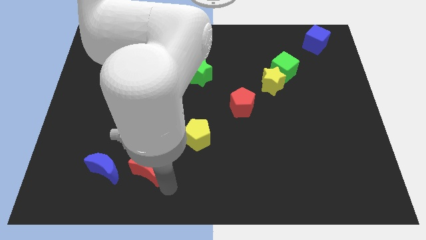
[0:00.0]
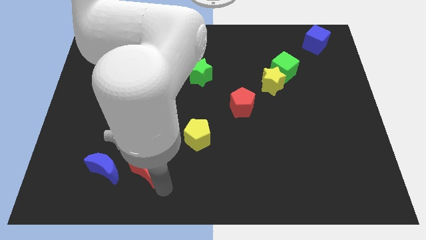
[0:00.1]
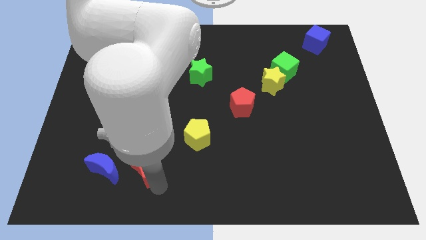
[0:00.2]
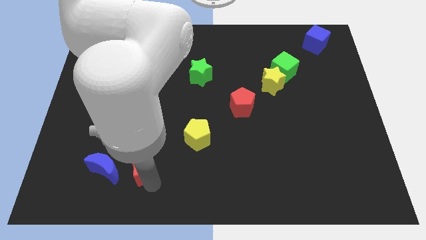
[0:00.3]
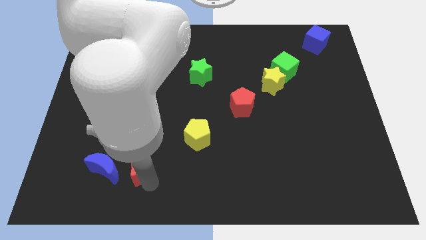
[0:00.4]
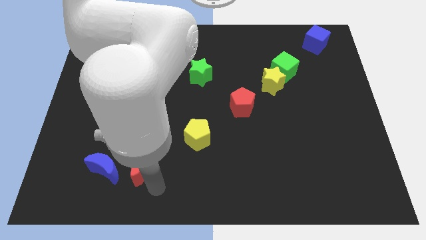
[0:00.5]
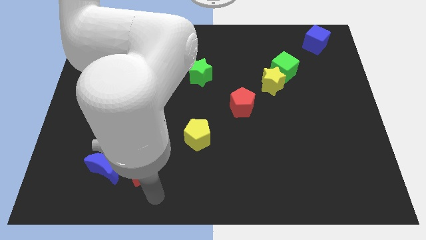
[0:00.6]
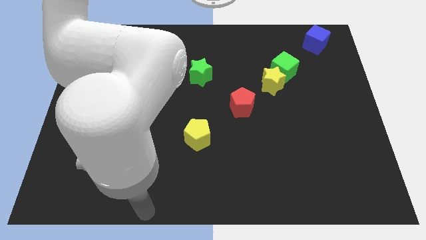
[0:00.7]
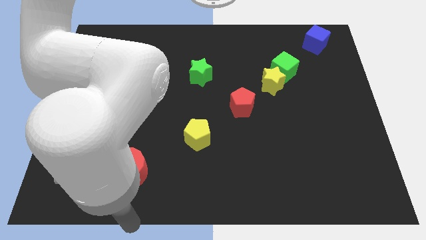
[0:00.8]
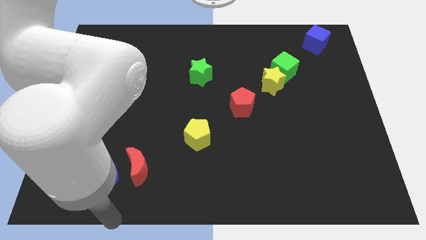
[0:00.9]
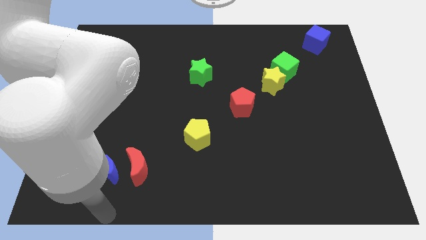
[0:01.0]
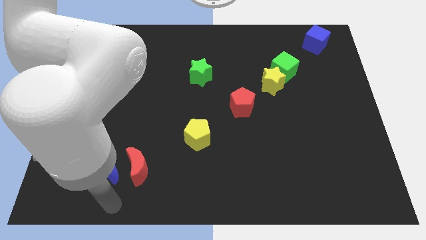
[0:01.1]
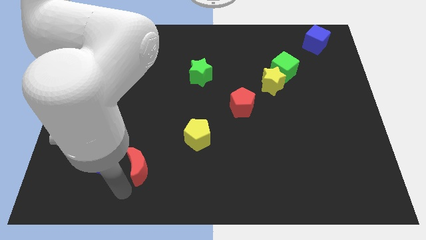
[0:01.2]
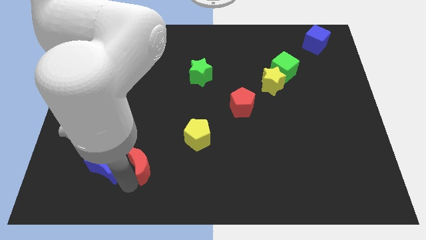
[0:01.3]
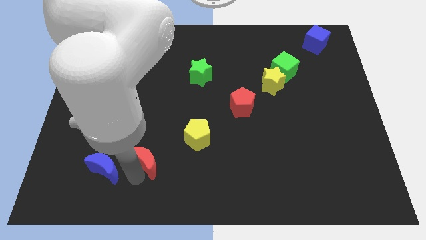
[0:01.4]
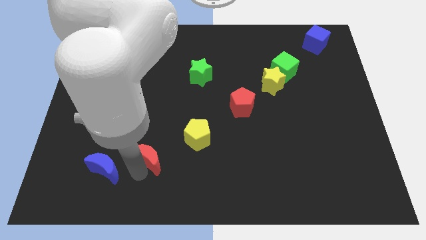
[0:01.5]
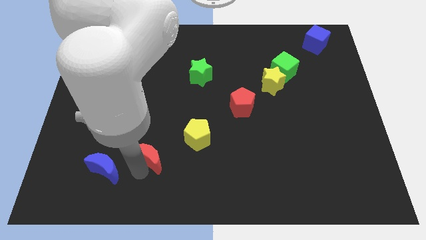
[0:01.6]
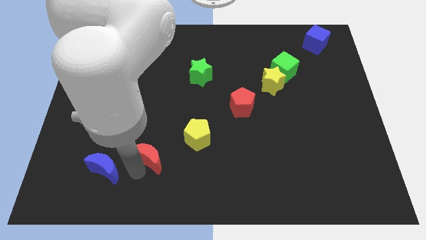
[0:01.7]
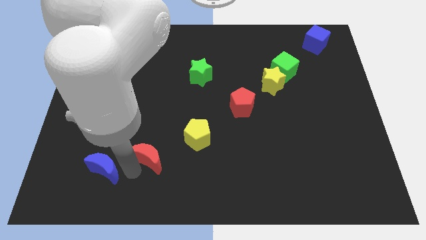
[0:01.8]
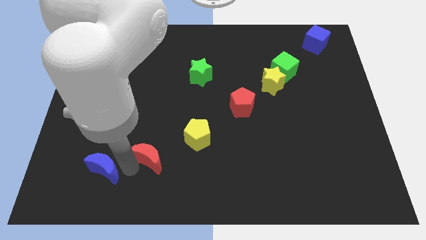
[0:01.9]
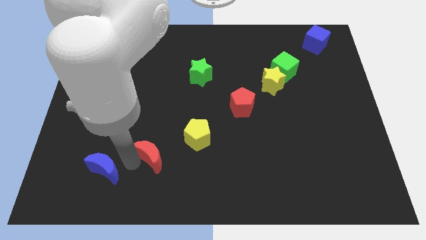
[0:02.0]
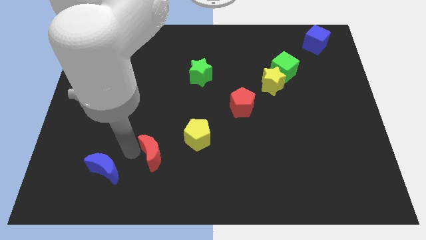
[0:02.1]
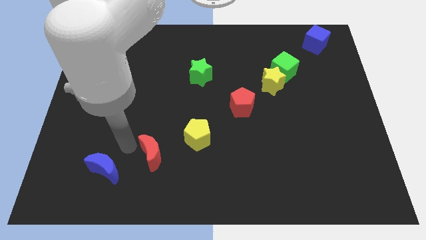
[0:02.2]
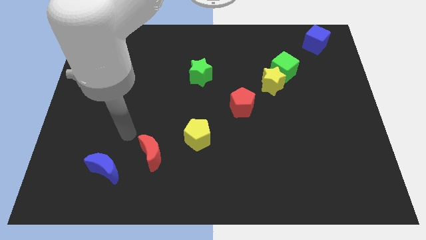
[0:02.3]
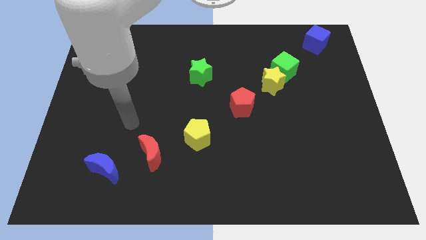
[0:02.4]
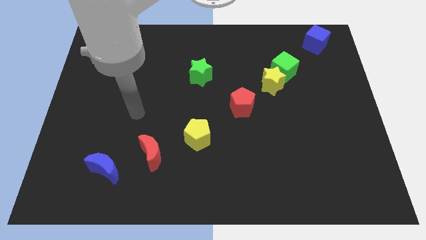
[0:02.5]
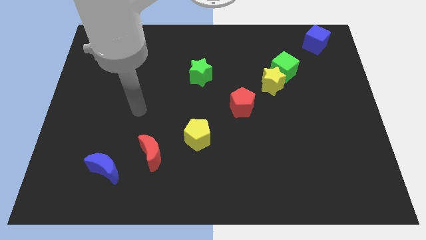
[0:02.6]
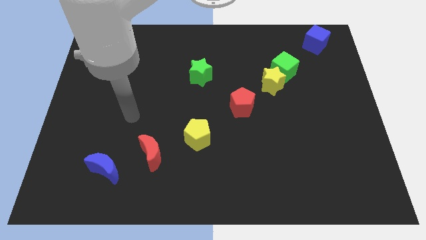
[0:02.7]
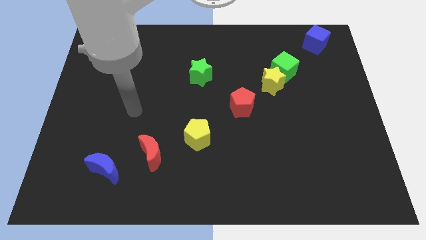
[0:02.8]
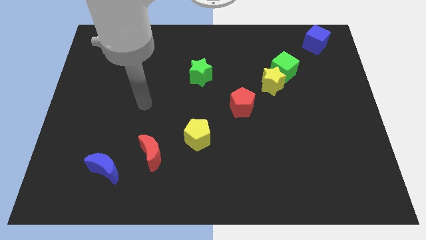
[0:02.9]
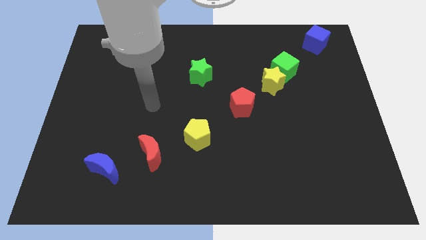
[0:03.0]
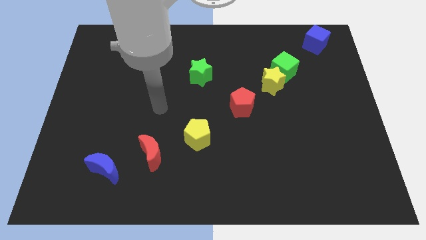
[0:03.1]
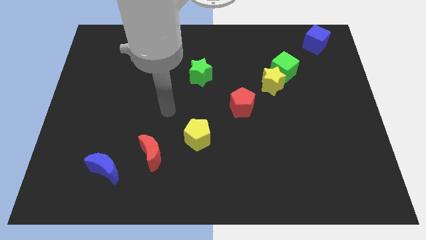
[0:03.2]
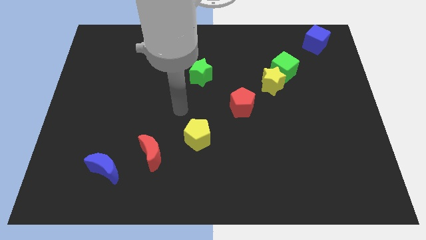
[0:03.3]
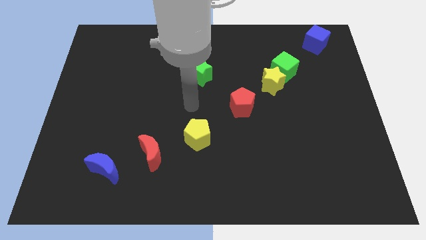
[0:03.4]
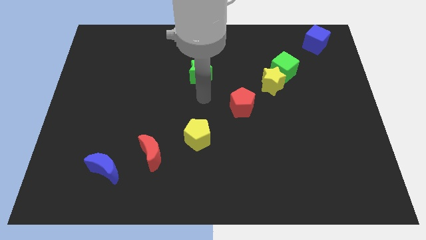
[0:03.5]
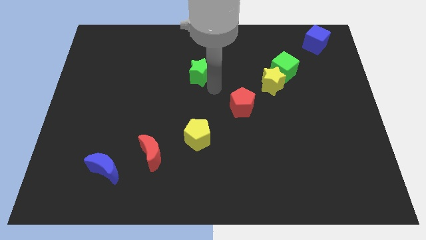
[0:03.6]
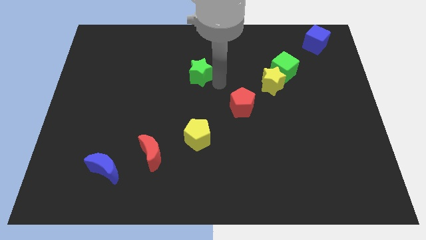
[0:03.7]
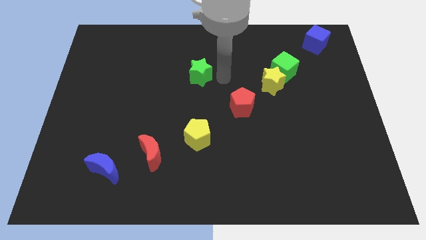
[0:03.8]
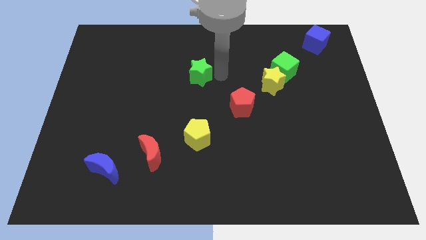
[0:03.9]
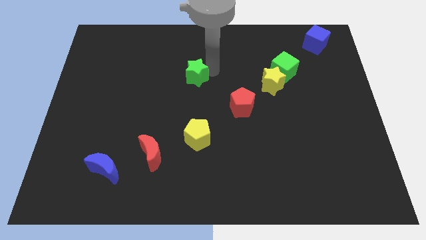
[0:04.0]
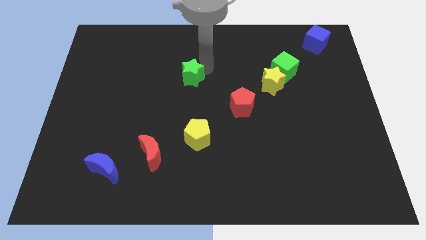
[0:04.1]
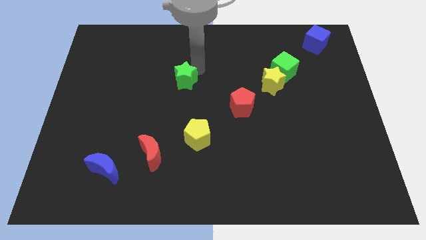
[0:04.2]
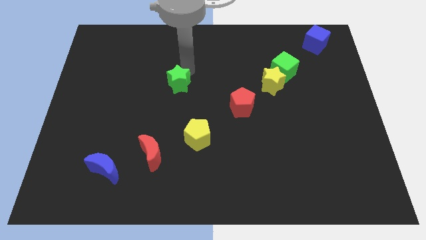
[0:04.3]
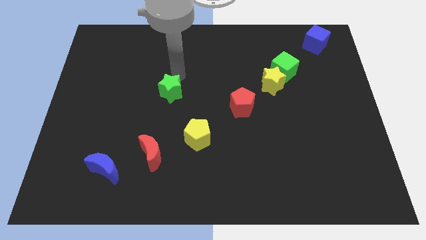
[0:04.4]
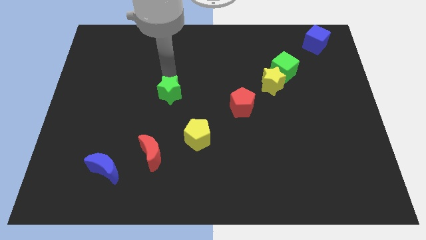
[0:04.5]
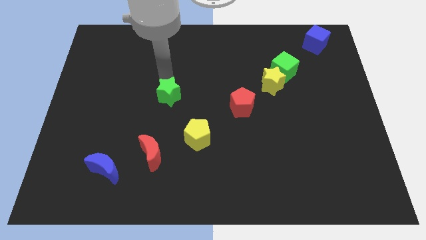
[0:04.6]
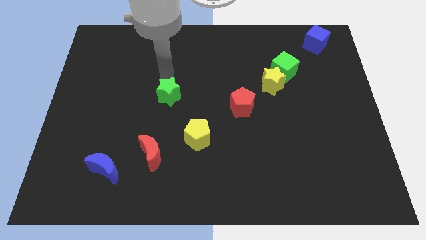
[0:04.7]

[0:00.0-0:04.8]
move green star downwards

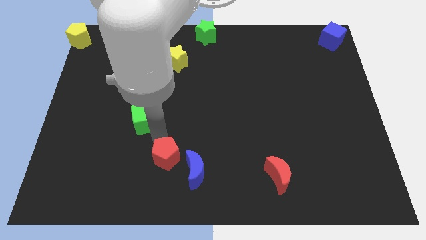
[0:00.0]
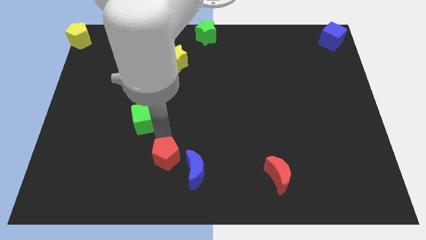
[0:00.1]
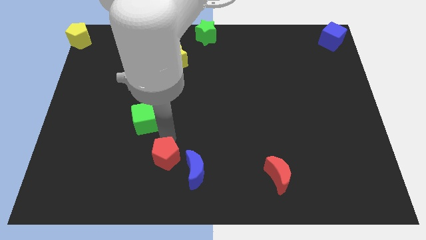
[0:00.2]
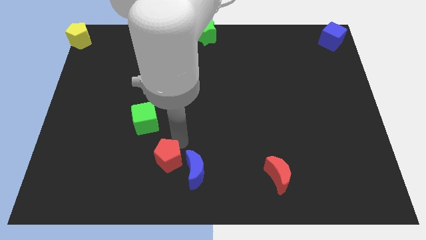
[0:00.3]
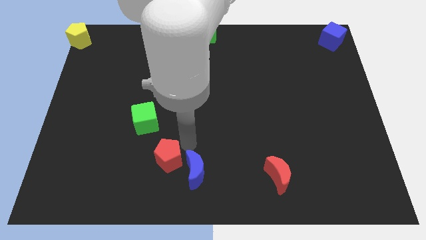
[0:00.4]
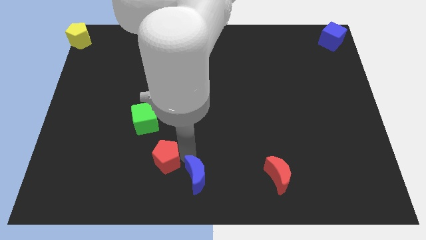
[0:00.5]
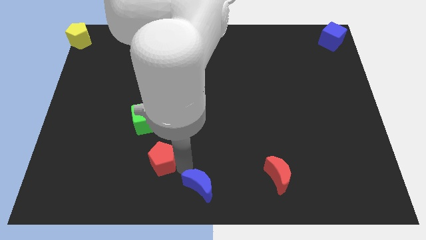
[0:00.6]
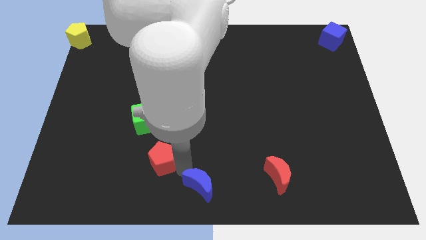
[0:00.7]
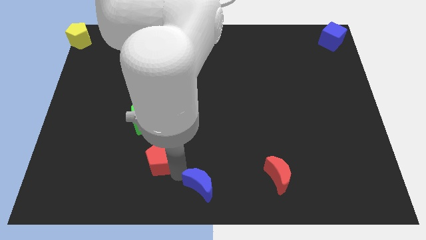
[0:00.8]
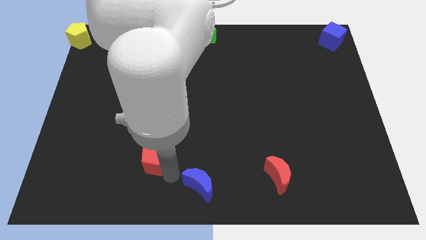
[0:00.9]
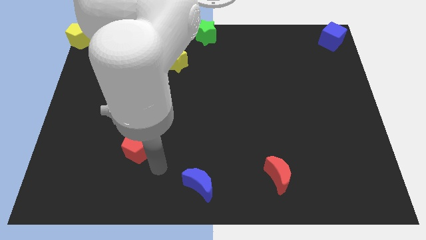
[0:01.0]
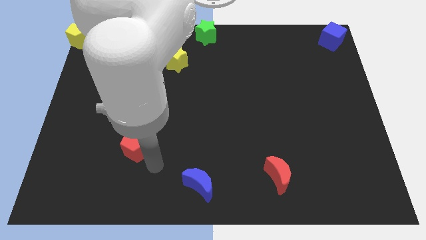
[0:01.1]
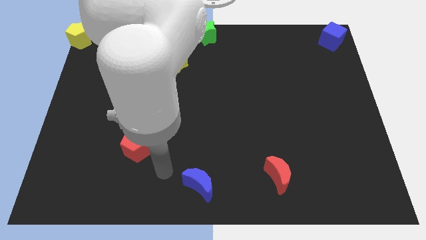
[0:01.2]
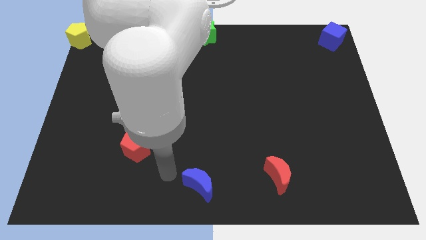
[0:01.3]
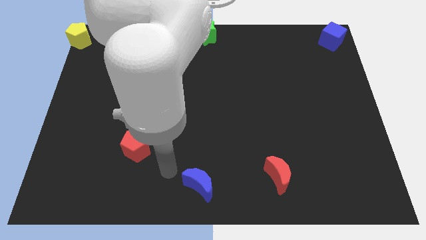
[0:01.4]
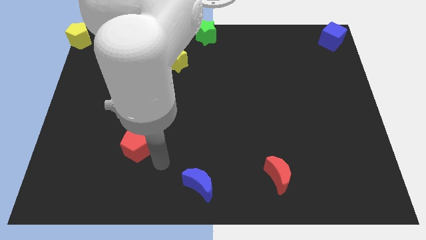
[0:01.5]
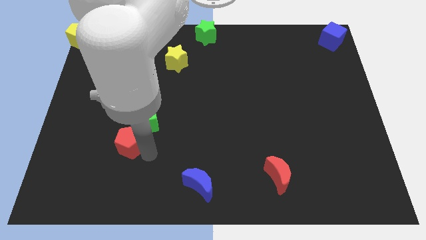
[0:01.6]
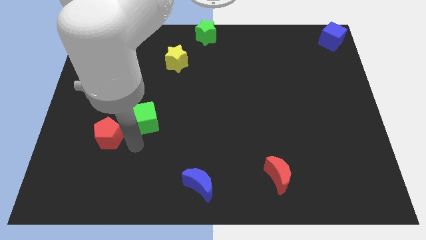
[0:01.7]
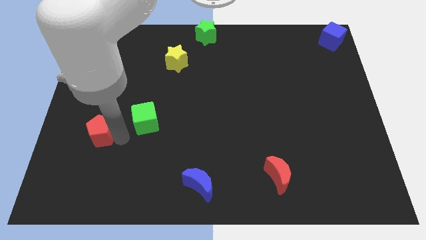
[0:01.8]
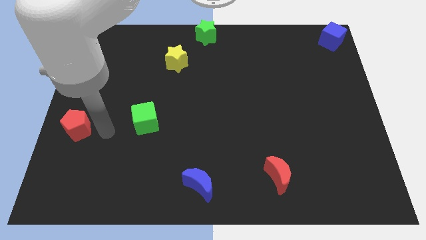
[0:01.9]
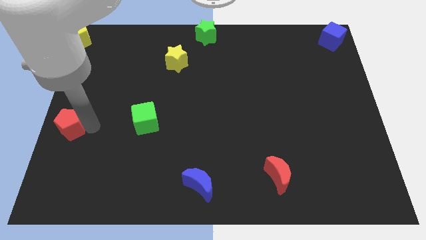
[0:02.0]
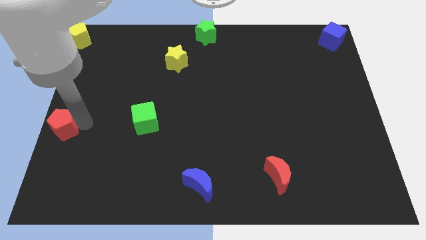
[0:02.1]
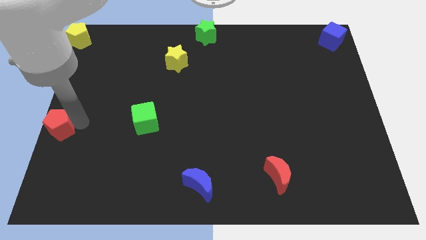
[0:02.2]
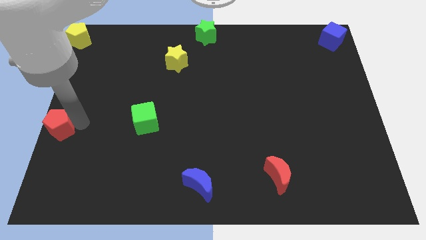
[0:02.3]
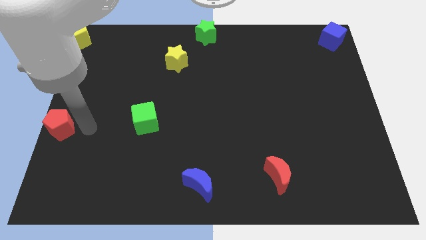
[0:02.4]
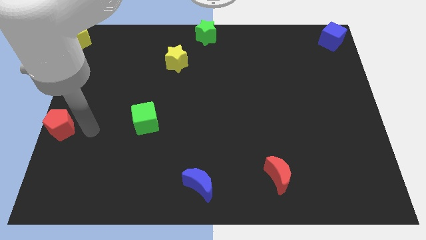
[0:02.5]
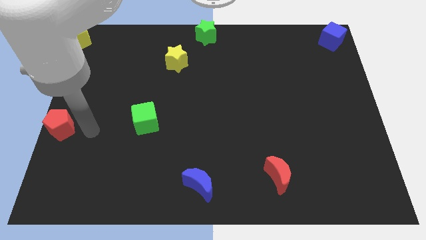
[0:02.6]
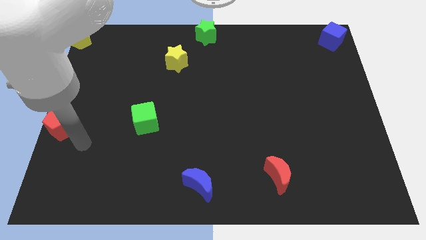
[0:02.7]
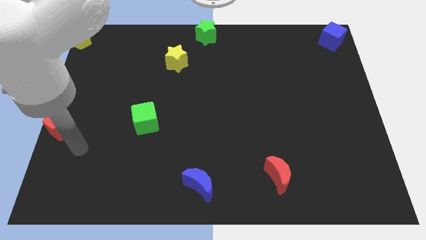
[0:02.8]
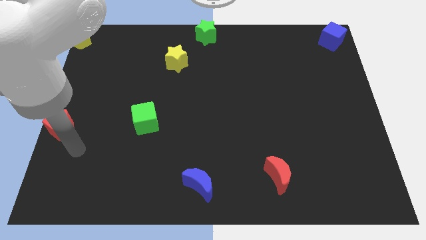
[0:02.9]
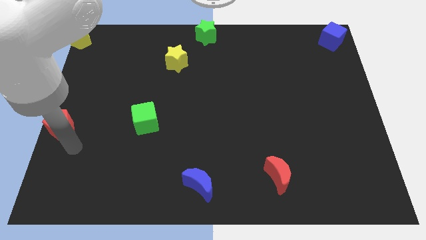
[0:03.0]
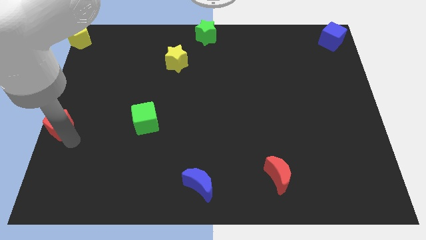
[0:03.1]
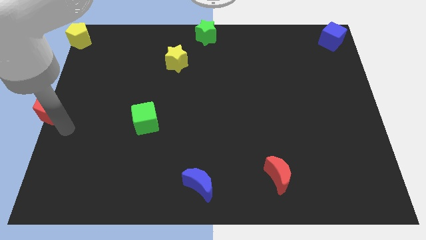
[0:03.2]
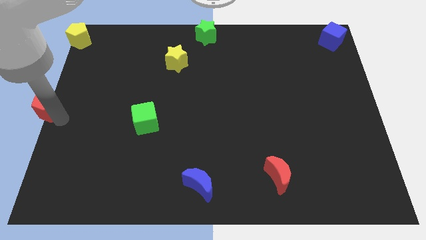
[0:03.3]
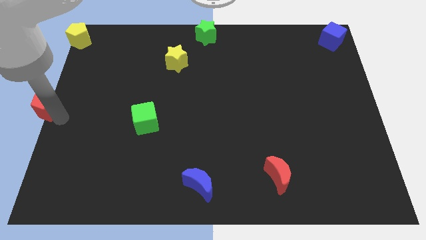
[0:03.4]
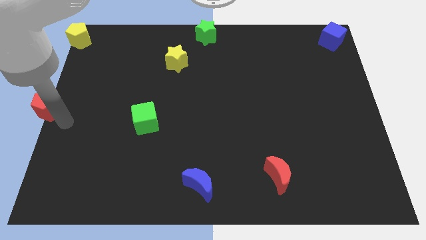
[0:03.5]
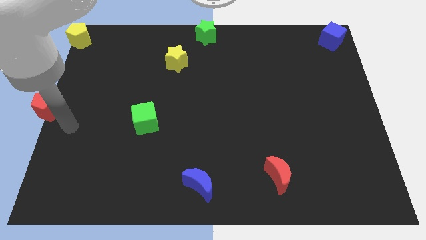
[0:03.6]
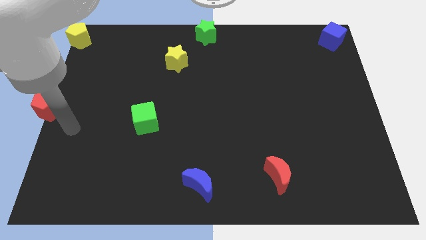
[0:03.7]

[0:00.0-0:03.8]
move the red pentagon to the left of green cube

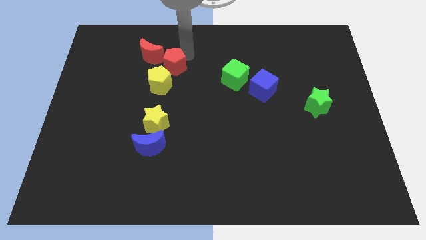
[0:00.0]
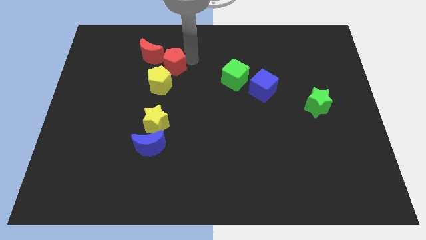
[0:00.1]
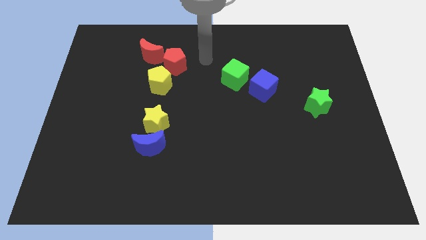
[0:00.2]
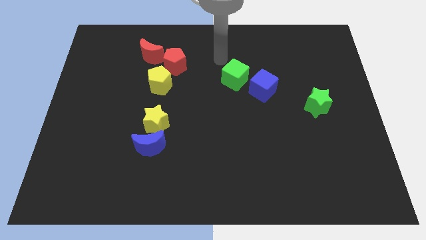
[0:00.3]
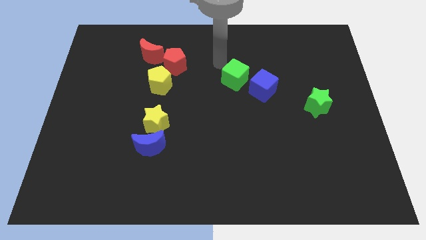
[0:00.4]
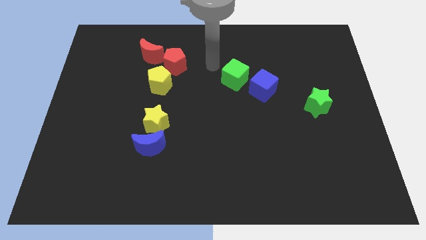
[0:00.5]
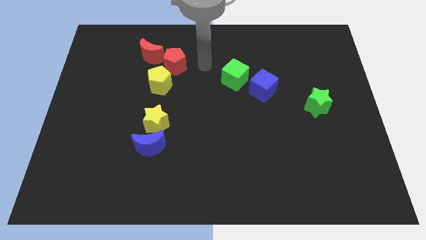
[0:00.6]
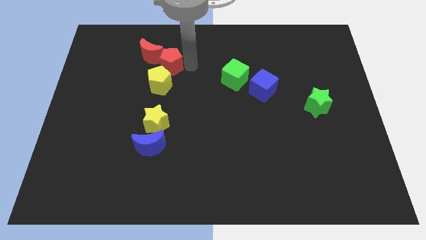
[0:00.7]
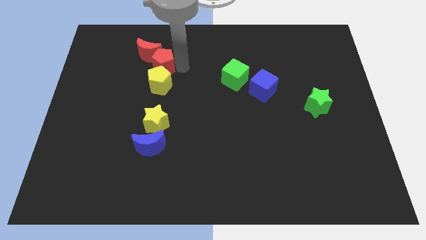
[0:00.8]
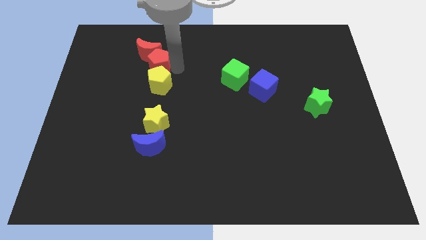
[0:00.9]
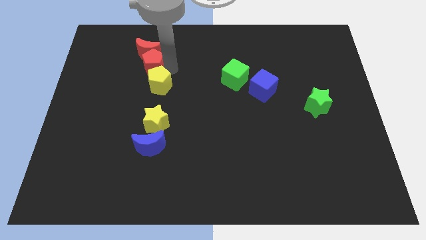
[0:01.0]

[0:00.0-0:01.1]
place the red pentagon between the red moon and yellow pentagon
